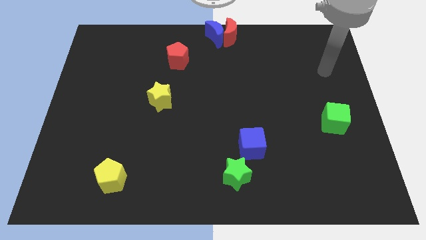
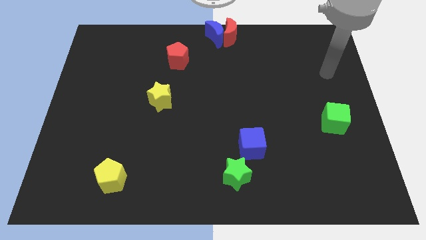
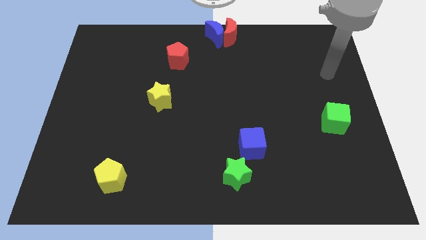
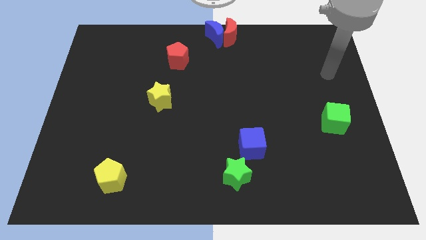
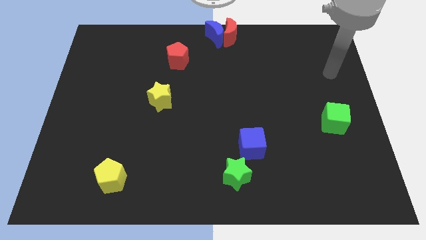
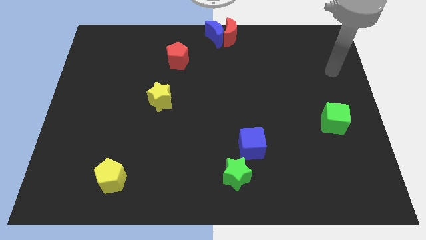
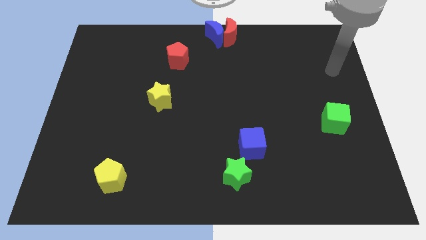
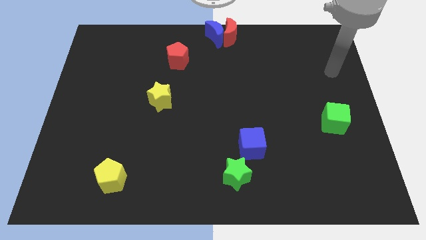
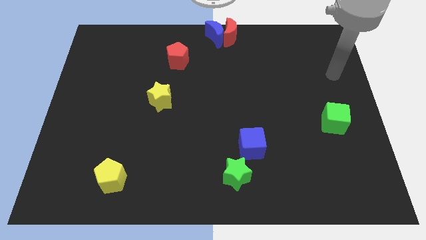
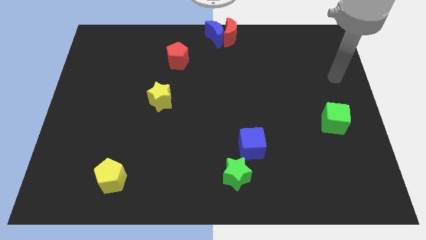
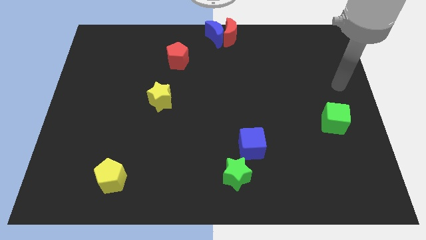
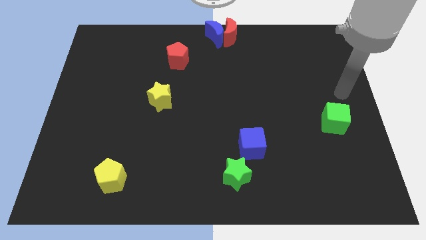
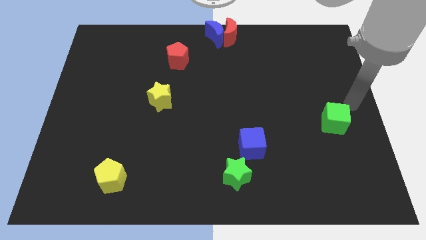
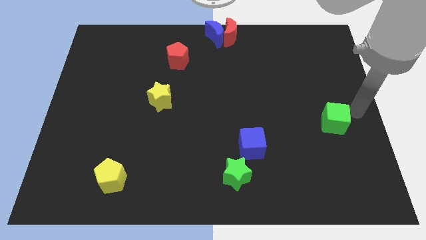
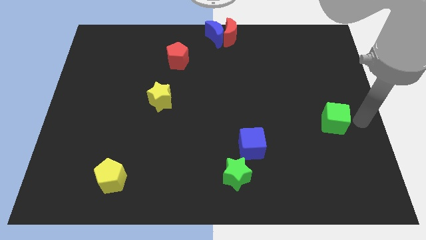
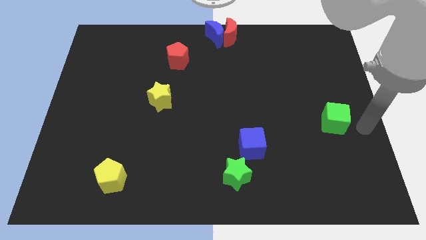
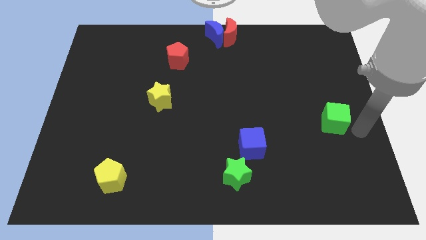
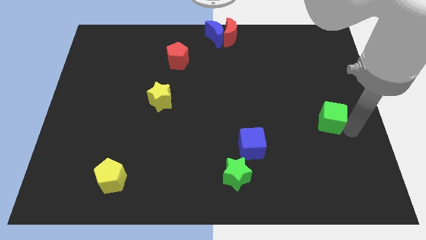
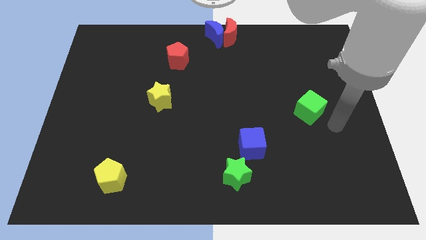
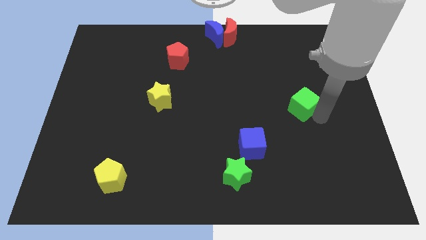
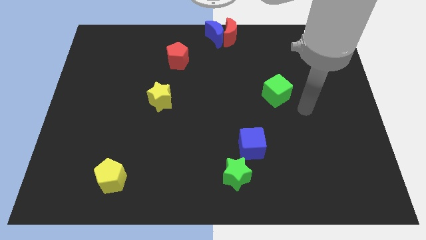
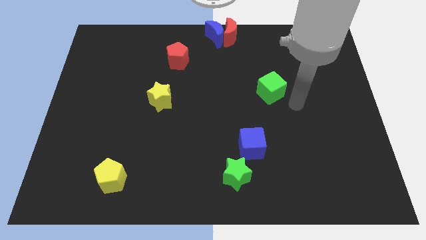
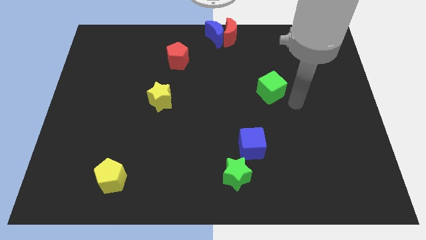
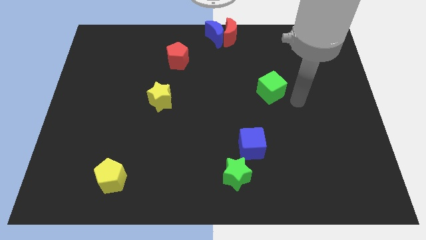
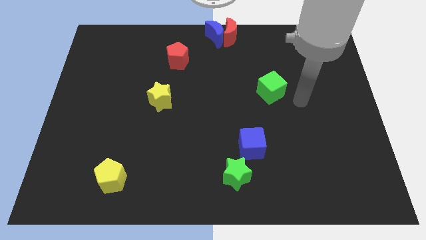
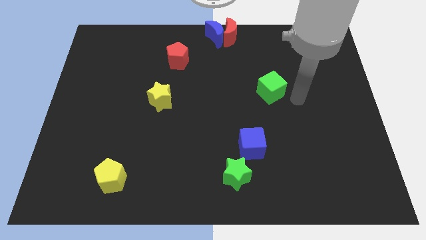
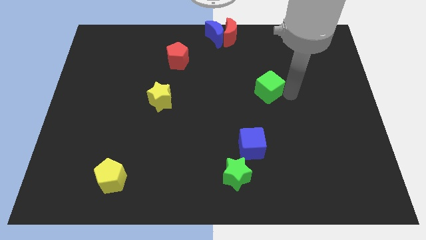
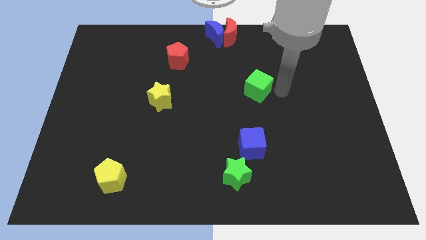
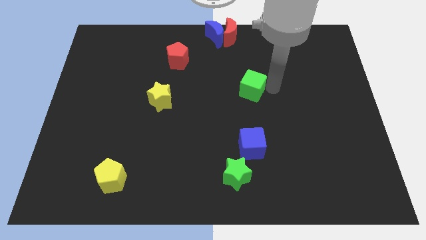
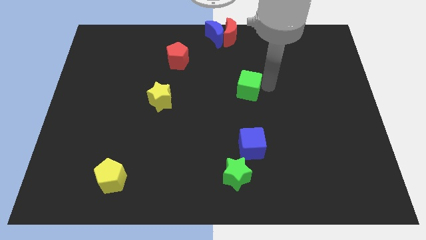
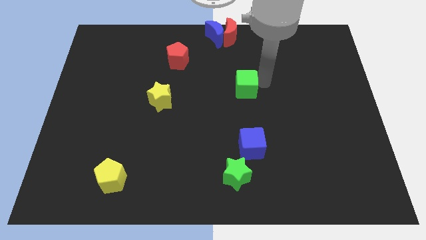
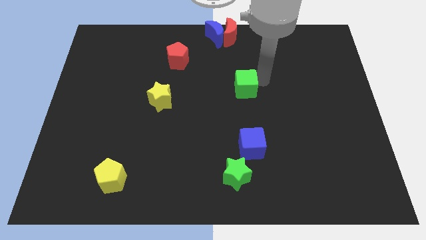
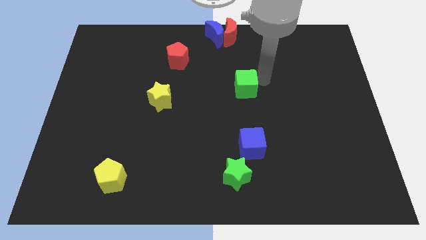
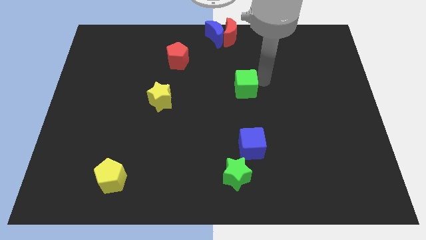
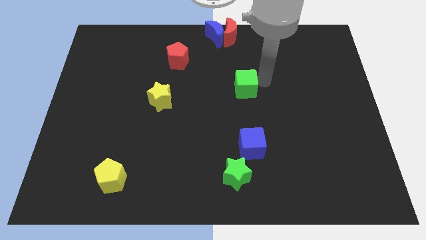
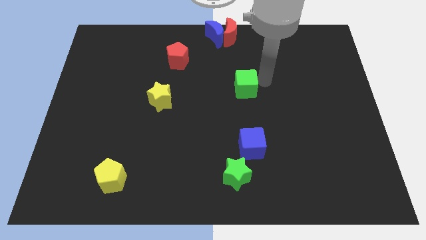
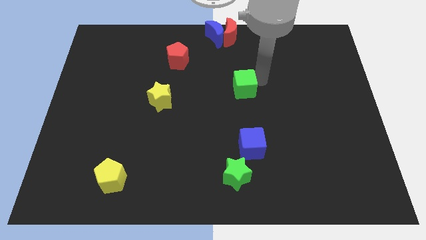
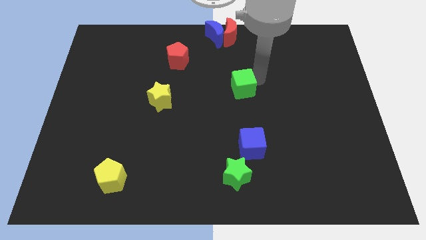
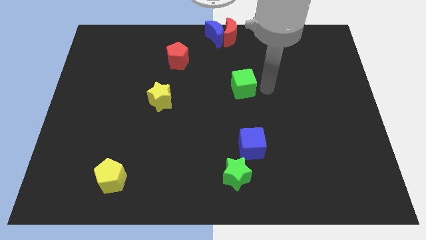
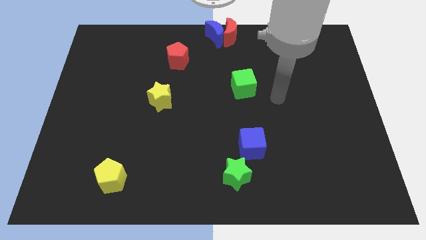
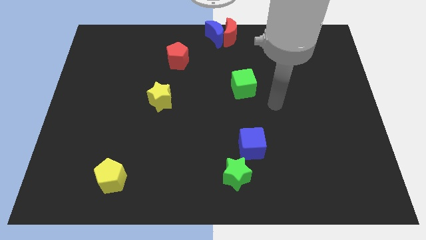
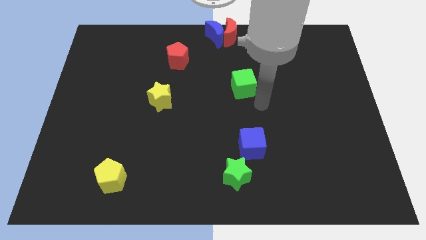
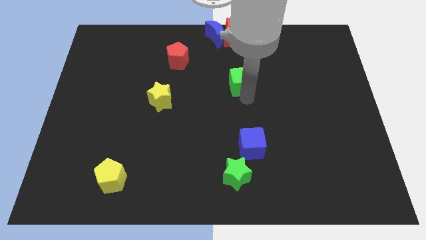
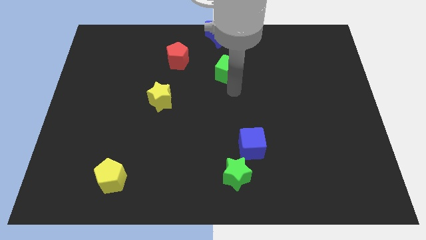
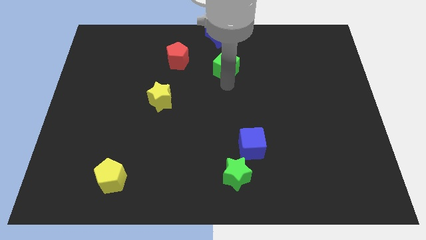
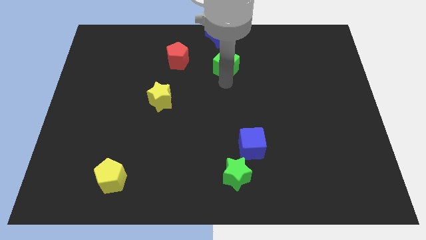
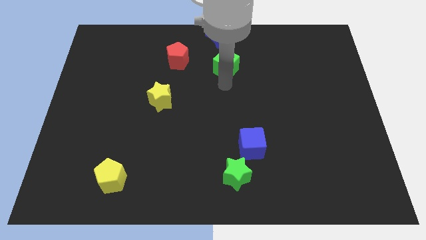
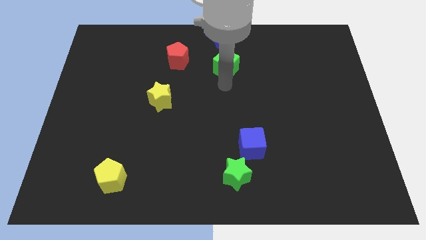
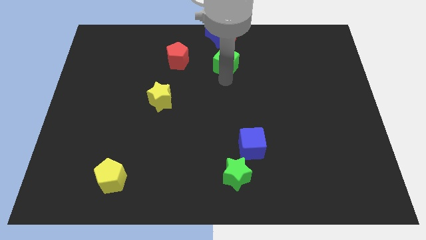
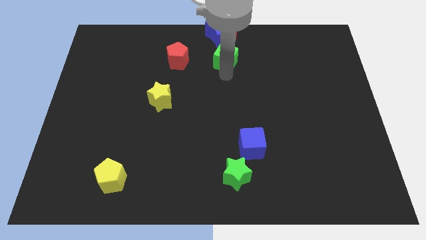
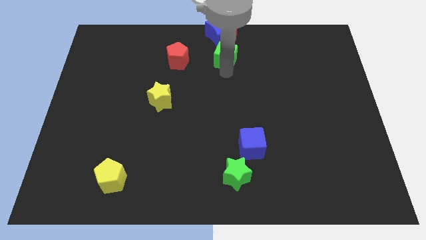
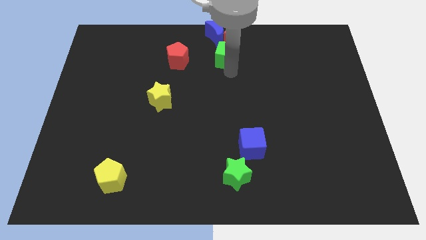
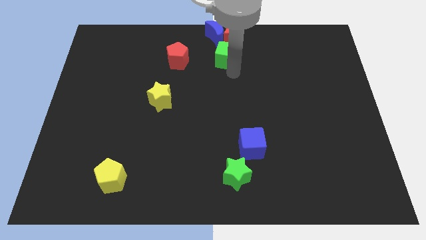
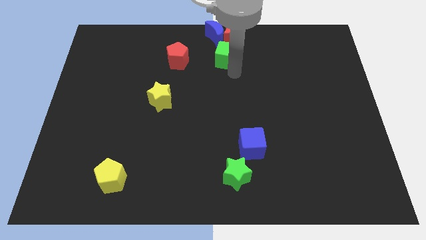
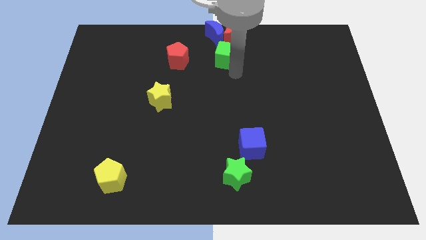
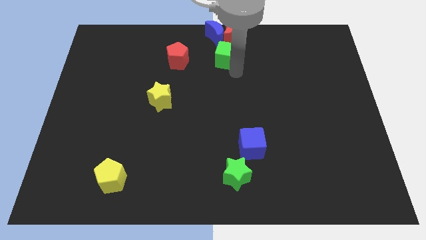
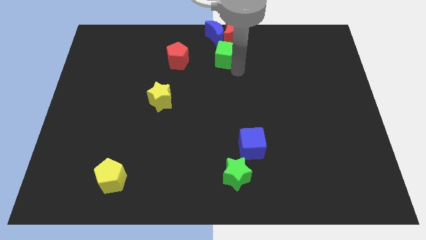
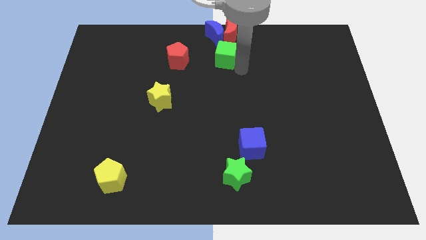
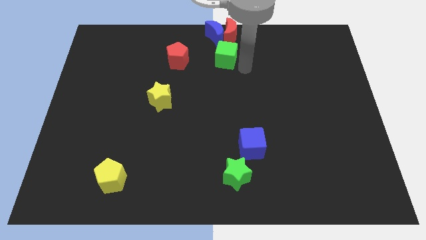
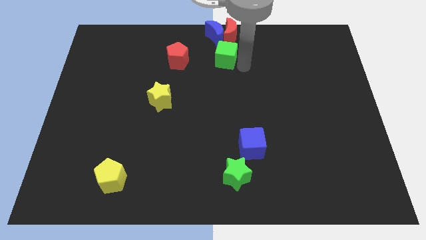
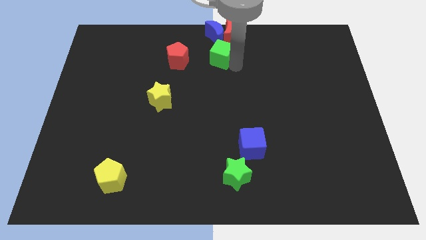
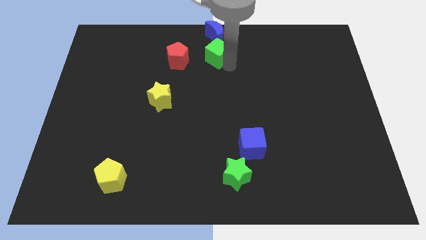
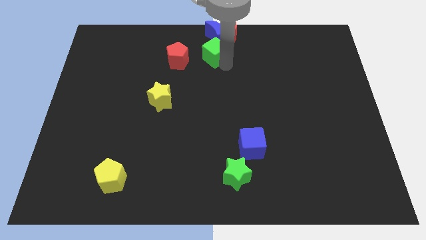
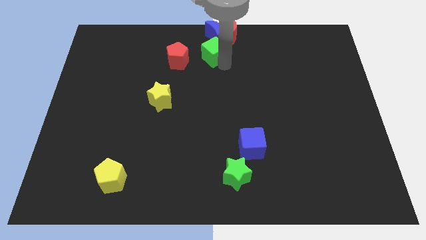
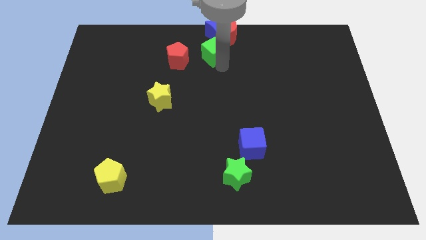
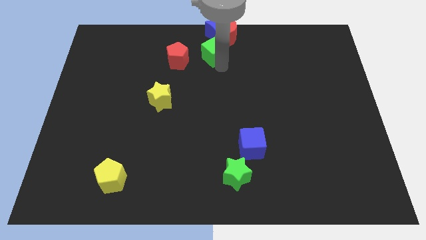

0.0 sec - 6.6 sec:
push the green cube below to the blue crescent

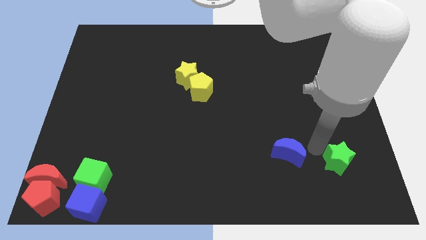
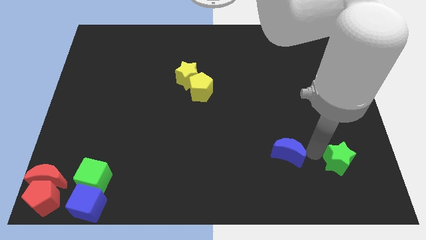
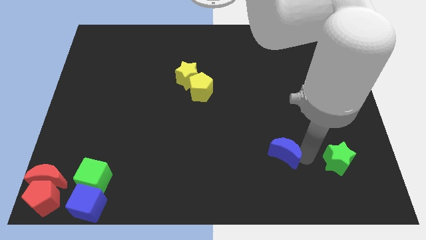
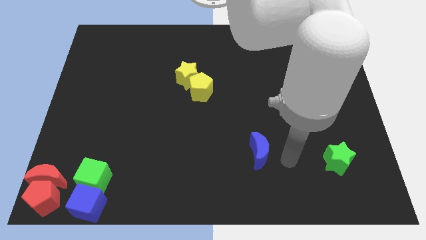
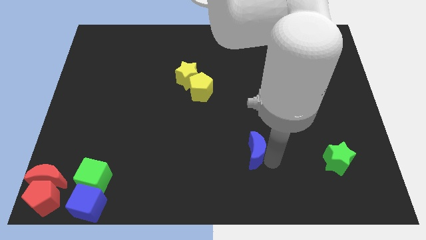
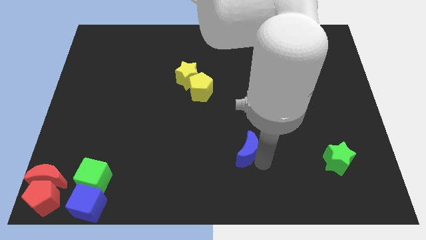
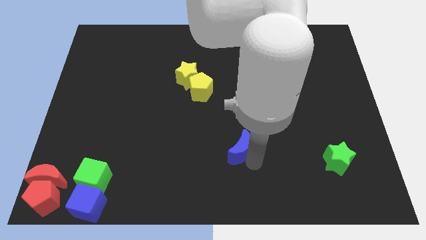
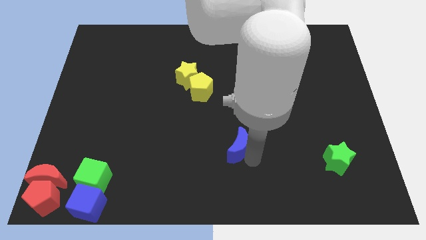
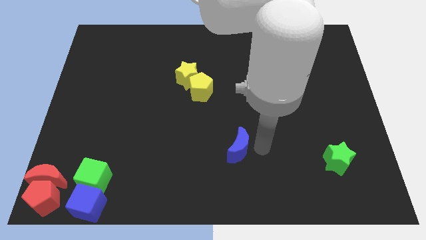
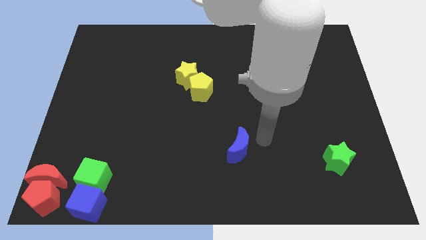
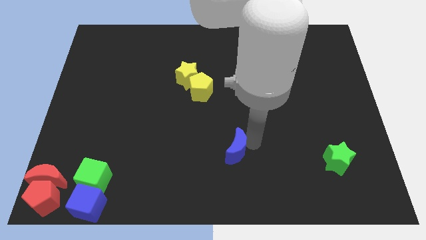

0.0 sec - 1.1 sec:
slide the blue moon to the bottom center of the board

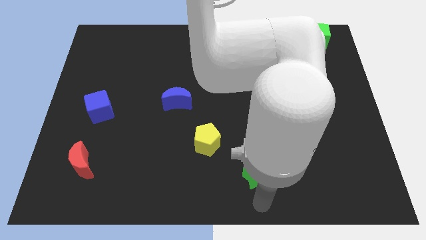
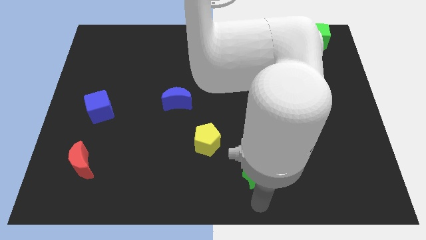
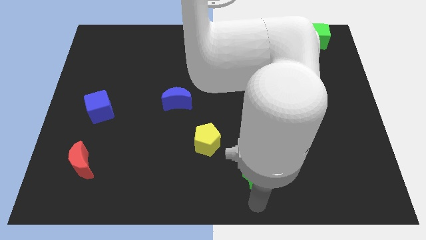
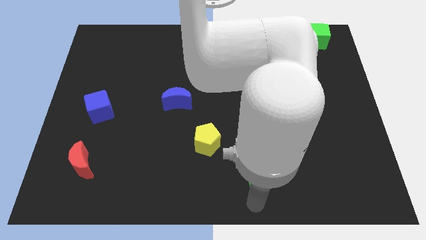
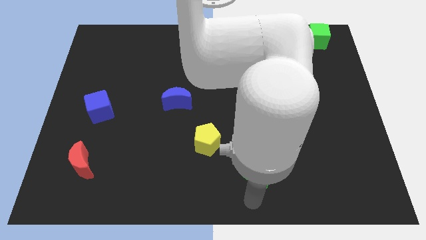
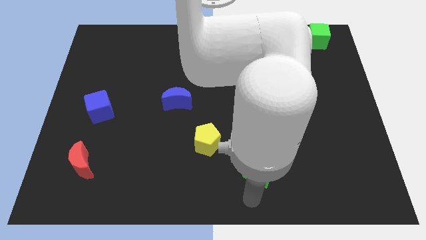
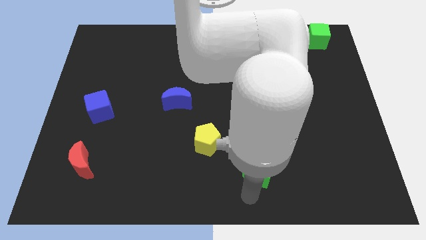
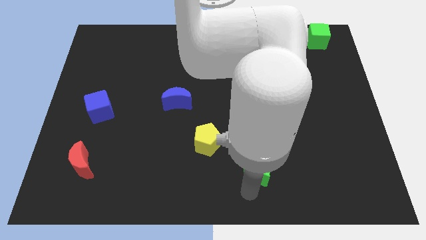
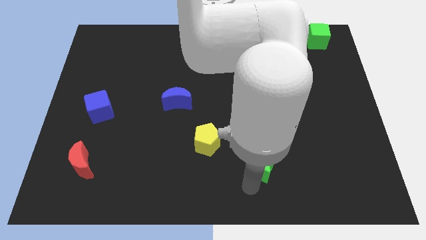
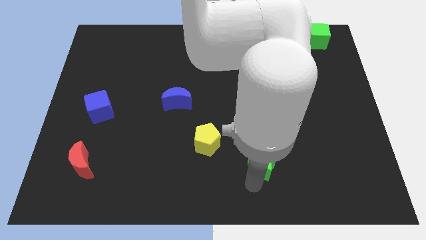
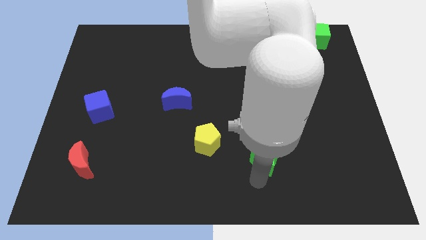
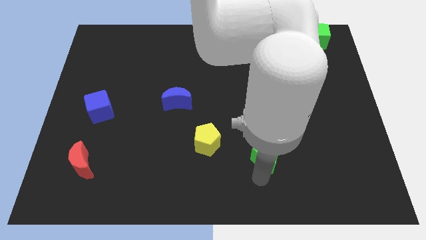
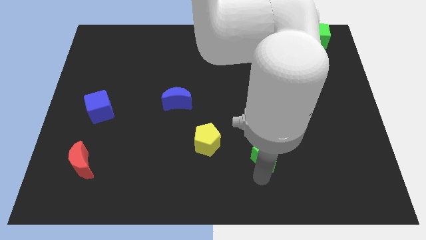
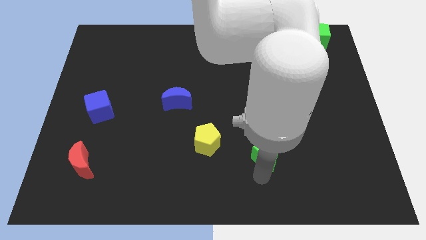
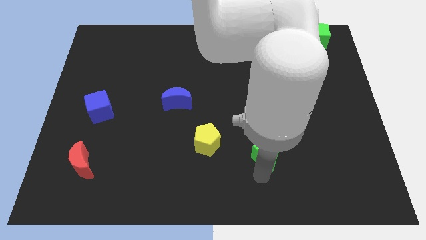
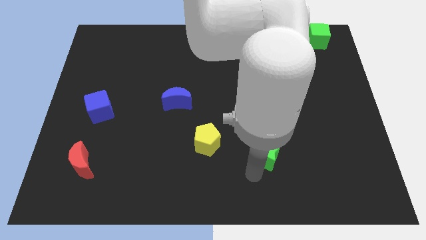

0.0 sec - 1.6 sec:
push the green star towards the yellow pentagon
